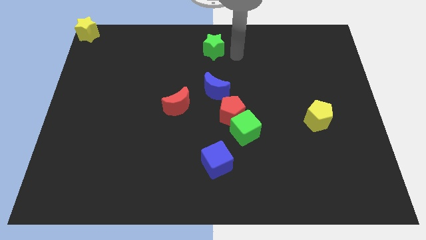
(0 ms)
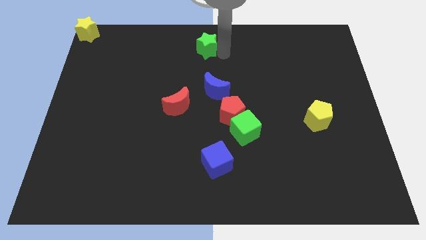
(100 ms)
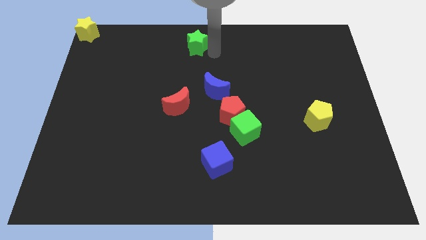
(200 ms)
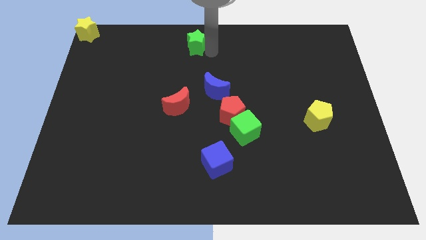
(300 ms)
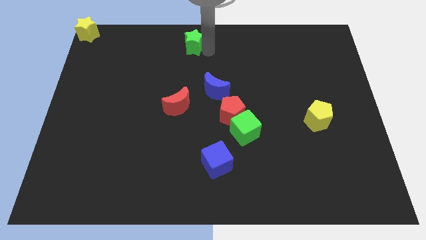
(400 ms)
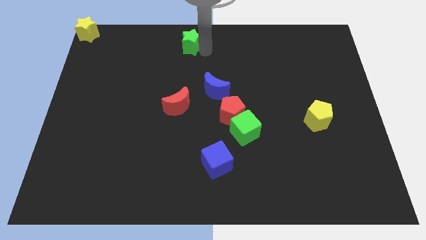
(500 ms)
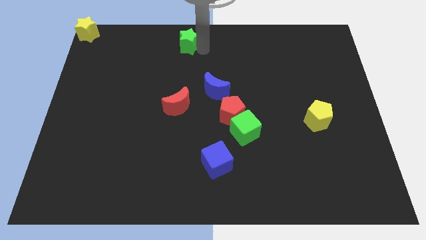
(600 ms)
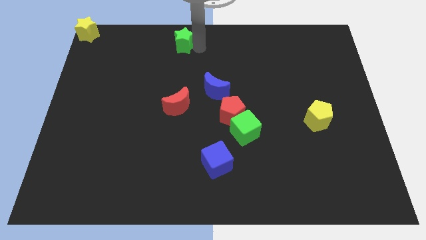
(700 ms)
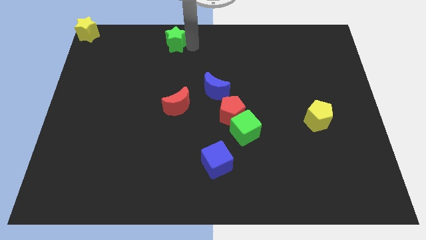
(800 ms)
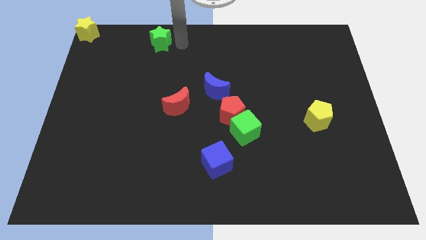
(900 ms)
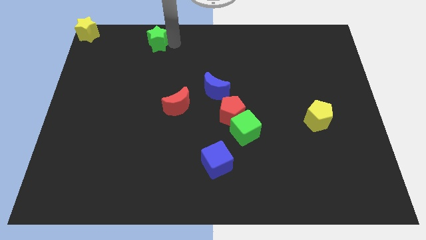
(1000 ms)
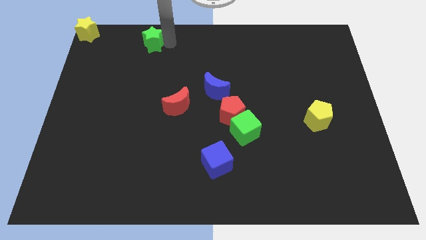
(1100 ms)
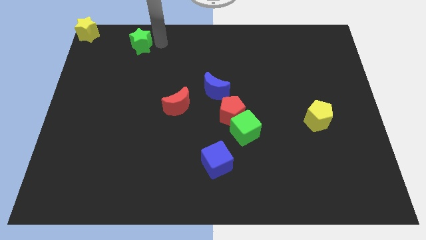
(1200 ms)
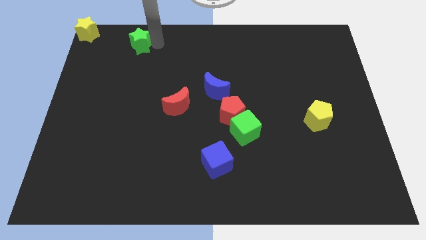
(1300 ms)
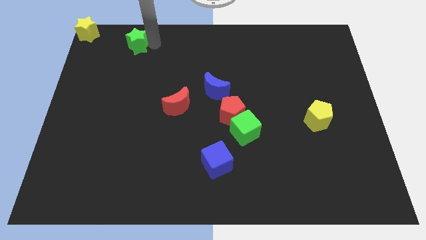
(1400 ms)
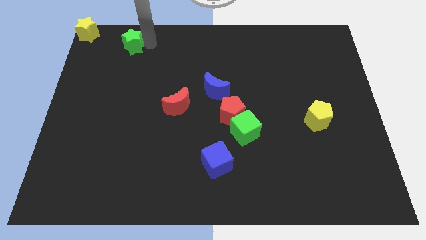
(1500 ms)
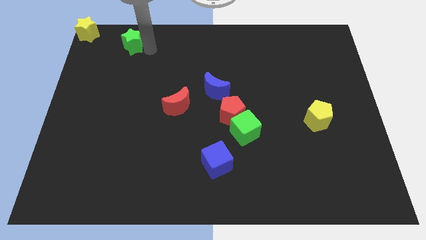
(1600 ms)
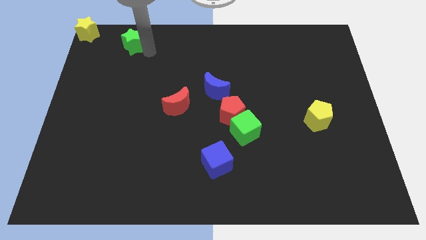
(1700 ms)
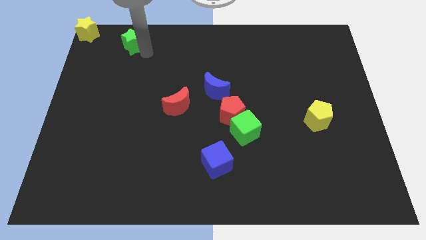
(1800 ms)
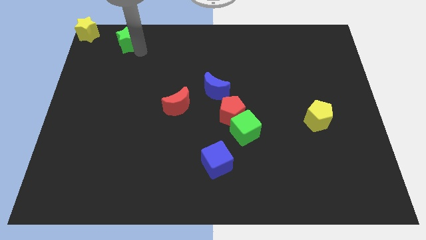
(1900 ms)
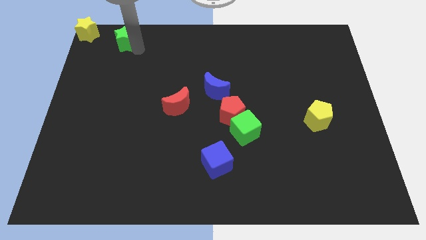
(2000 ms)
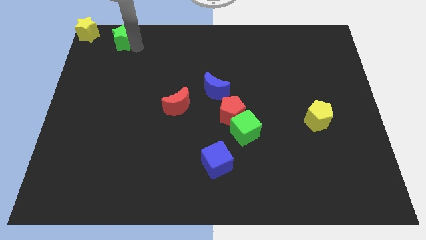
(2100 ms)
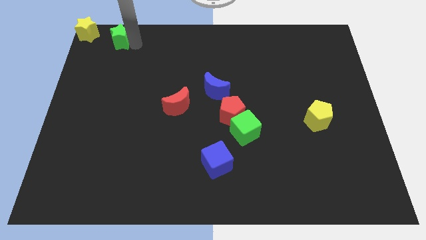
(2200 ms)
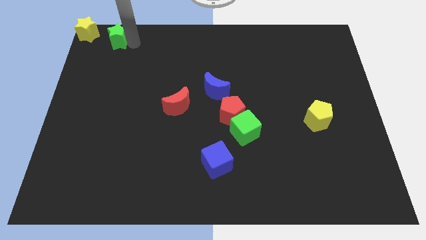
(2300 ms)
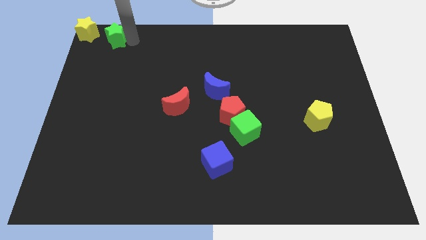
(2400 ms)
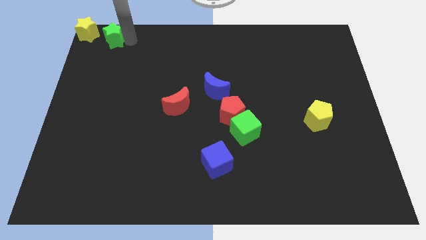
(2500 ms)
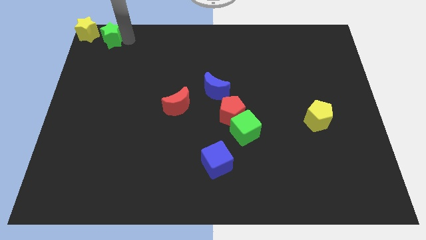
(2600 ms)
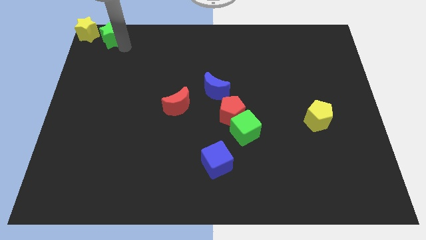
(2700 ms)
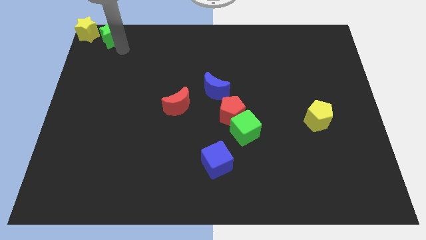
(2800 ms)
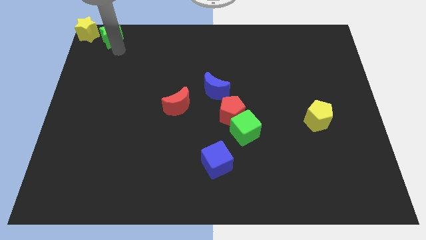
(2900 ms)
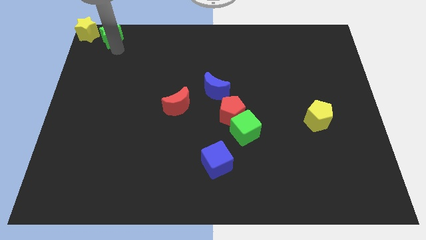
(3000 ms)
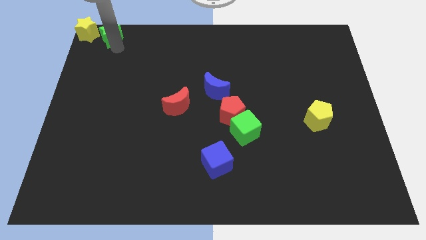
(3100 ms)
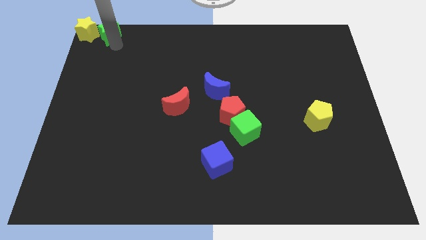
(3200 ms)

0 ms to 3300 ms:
push the green star into the right side of the yellow star

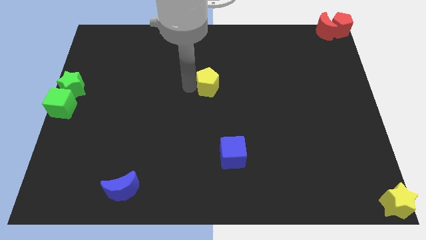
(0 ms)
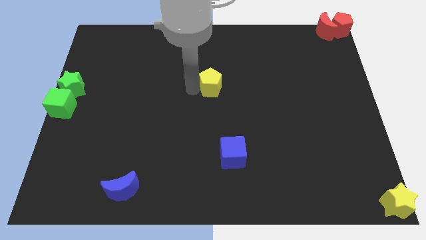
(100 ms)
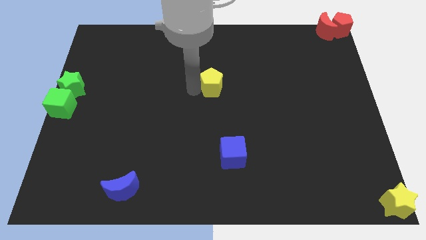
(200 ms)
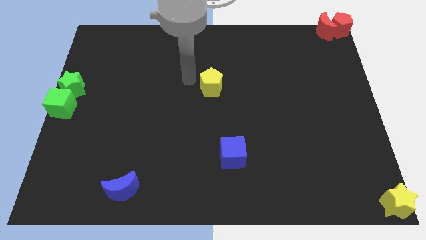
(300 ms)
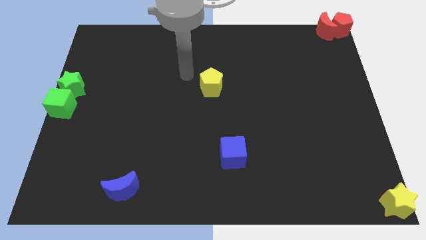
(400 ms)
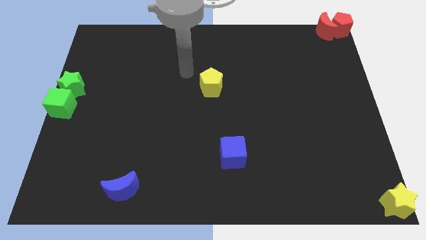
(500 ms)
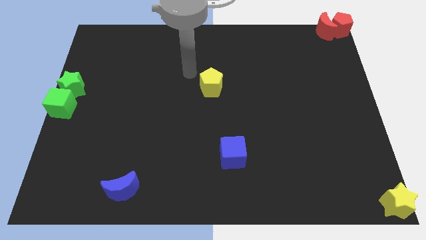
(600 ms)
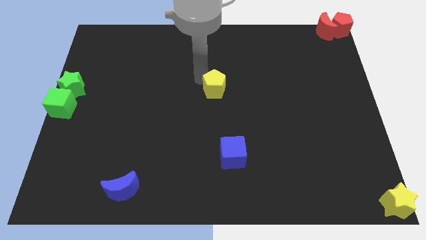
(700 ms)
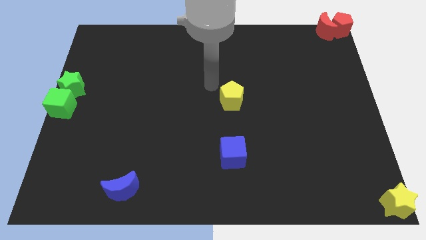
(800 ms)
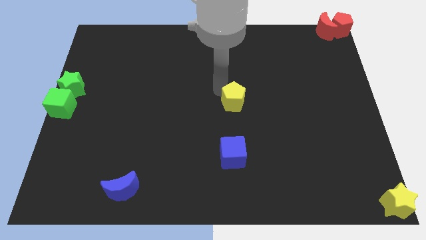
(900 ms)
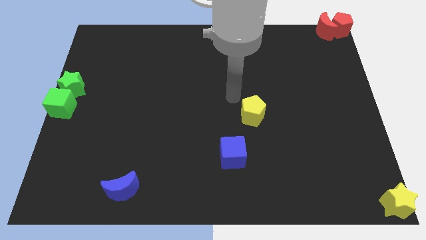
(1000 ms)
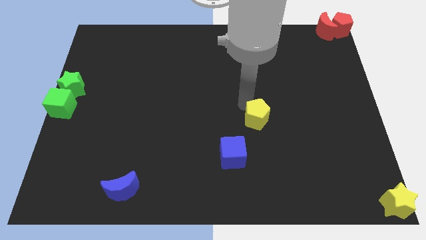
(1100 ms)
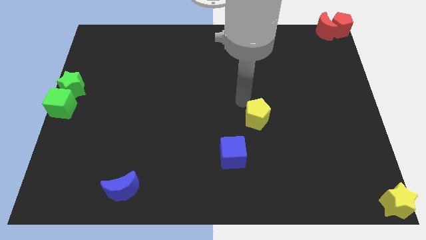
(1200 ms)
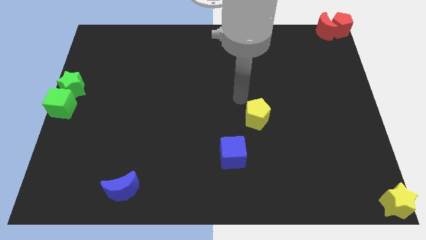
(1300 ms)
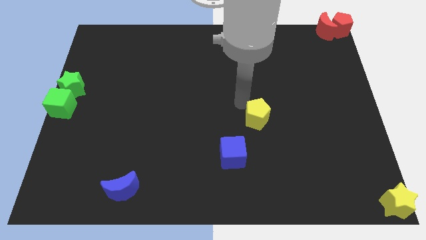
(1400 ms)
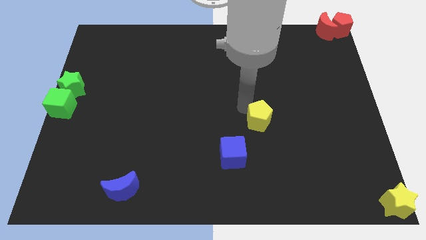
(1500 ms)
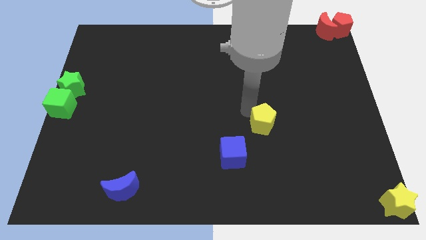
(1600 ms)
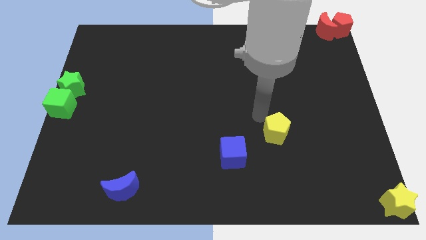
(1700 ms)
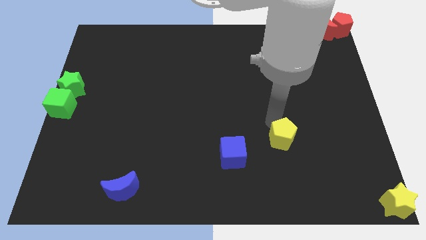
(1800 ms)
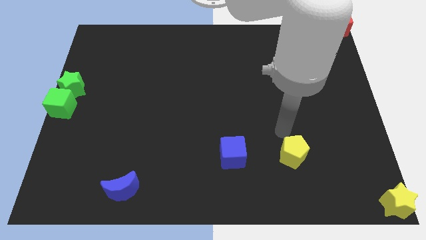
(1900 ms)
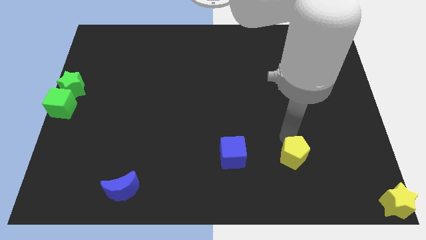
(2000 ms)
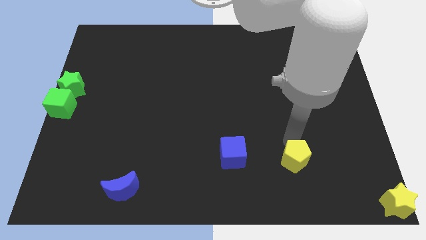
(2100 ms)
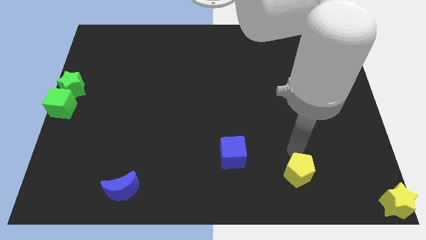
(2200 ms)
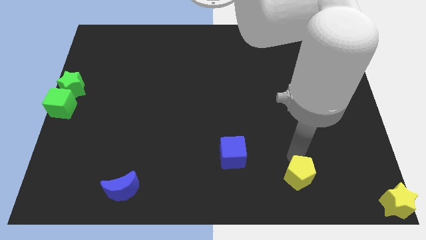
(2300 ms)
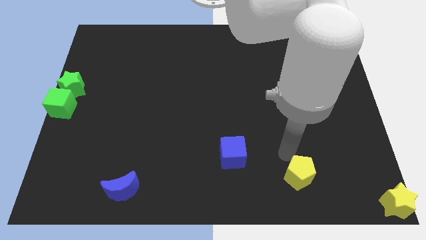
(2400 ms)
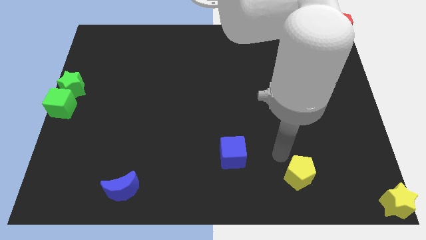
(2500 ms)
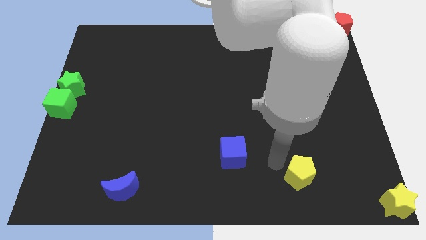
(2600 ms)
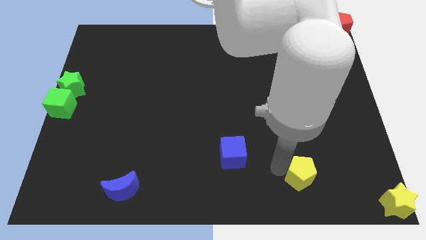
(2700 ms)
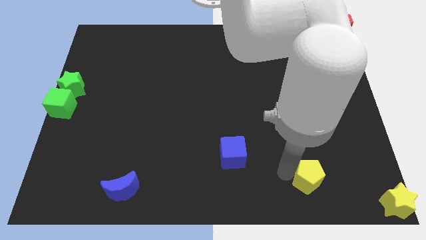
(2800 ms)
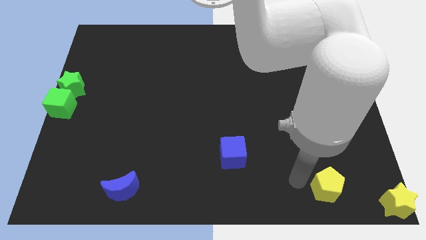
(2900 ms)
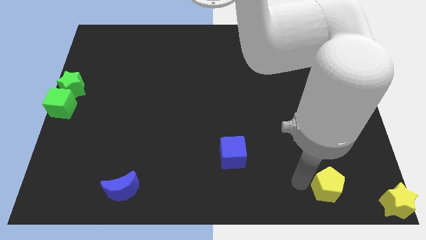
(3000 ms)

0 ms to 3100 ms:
push the yellow pentagon towards the yellow star

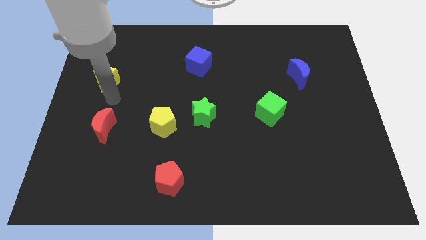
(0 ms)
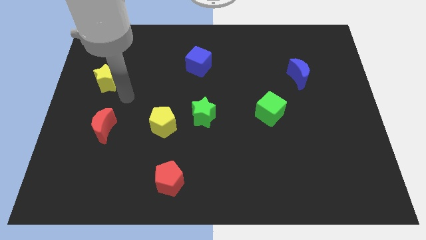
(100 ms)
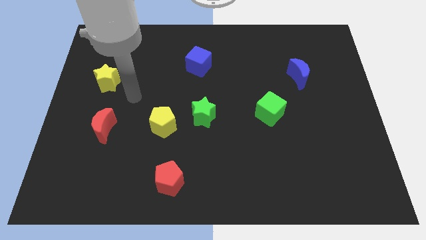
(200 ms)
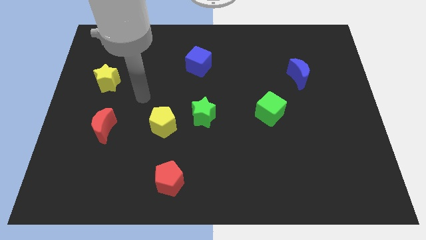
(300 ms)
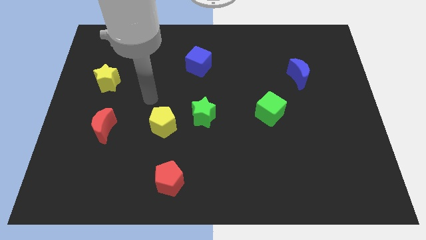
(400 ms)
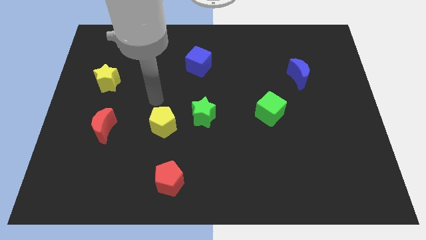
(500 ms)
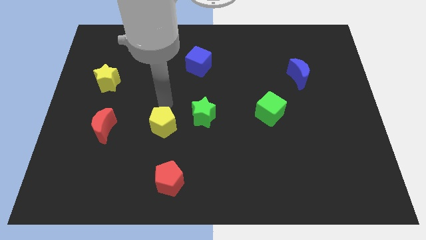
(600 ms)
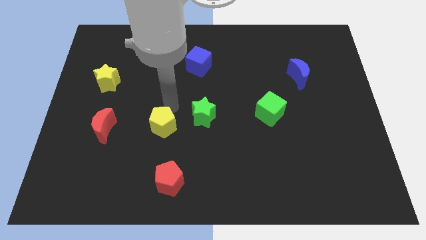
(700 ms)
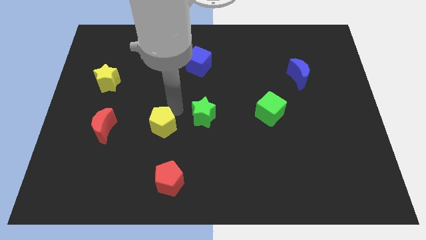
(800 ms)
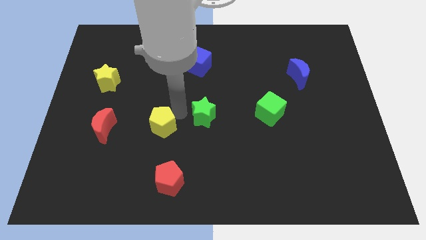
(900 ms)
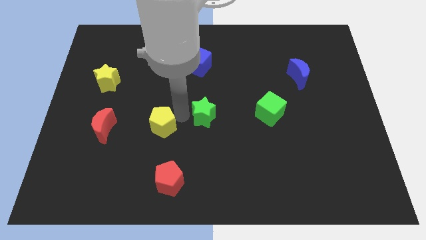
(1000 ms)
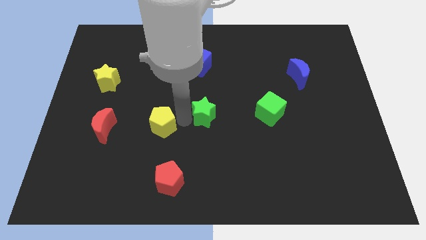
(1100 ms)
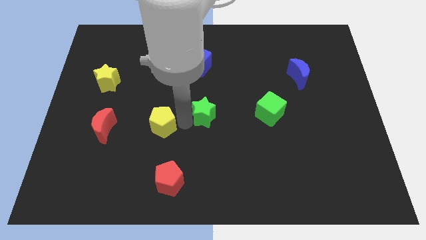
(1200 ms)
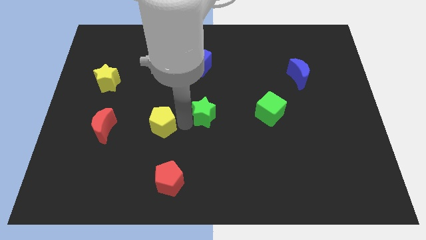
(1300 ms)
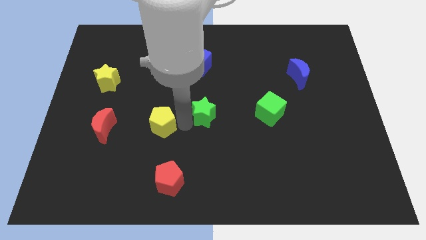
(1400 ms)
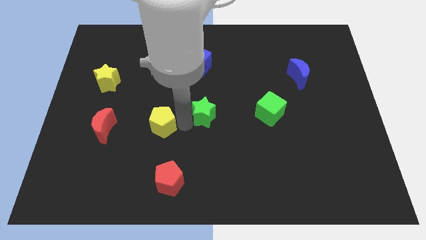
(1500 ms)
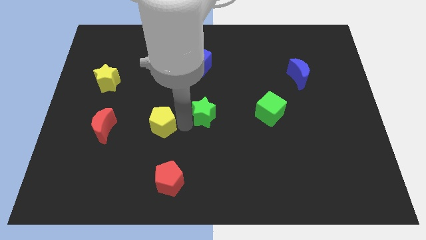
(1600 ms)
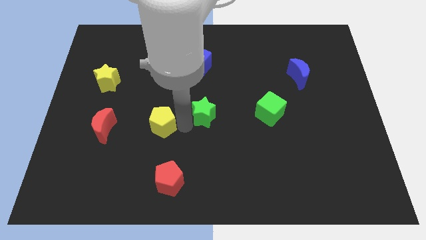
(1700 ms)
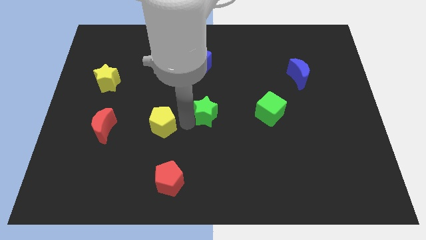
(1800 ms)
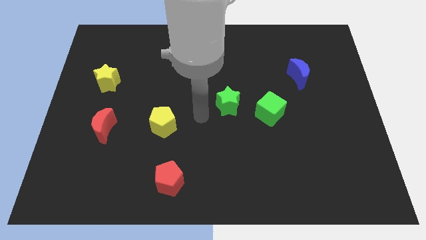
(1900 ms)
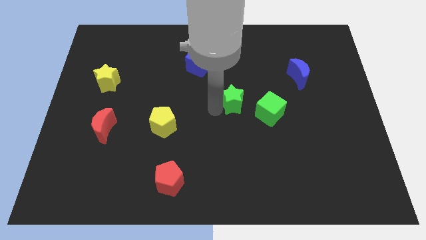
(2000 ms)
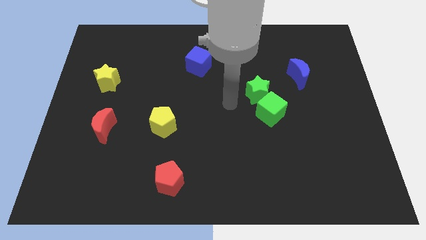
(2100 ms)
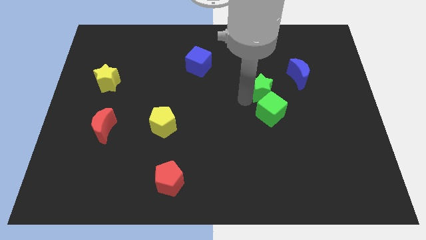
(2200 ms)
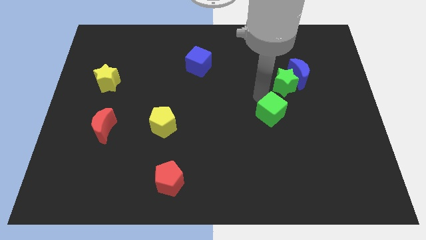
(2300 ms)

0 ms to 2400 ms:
place the green star above the green cube

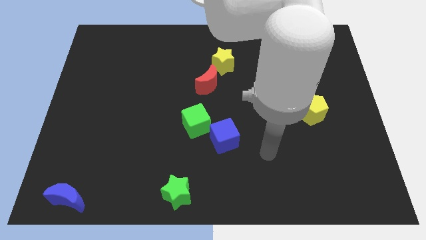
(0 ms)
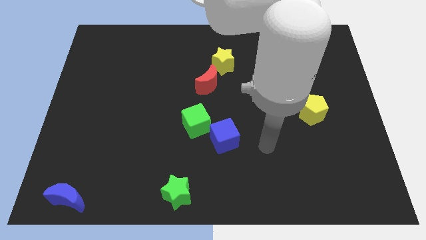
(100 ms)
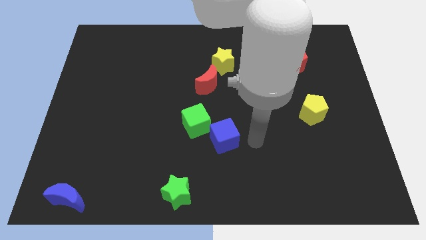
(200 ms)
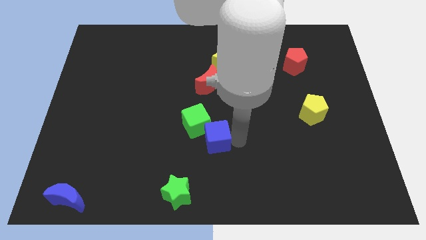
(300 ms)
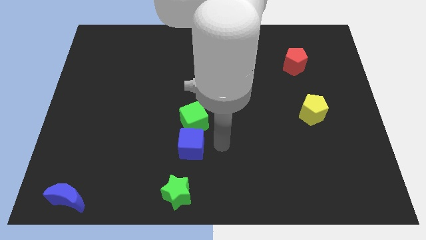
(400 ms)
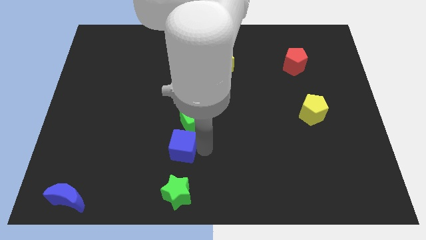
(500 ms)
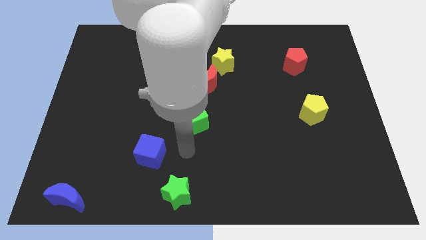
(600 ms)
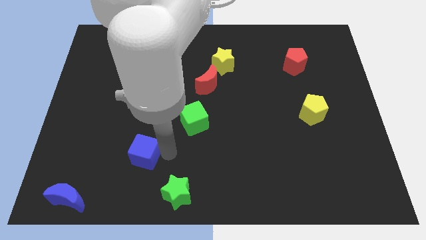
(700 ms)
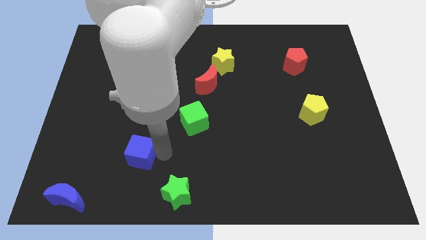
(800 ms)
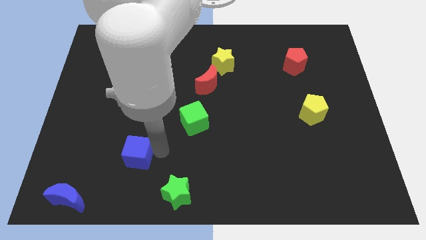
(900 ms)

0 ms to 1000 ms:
separate the blue cube away from the green cube
